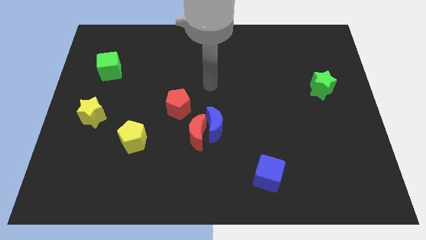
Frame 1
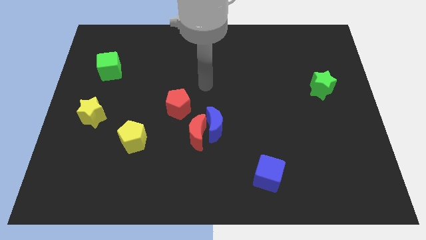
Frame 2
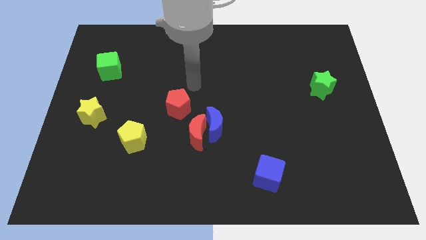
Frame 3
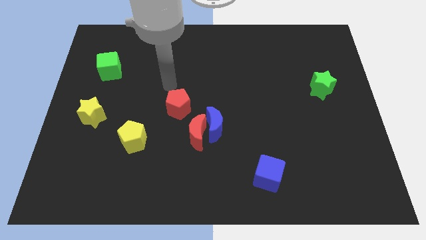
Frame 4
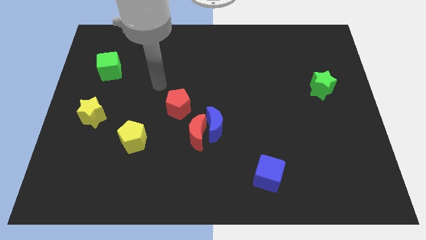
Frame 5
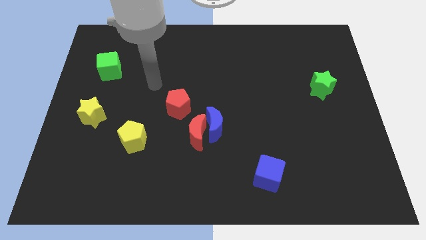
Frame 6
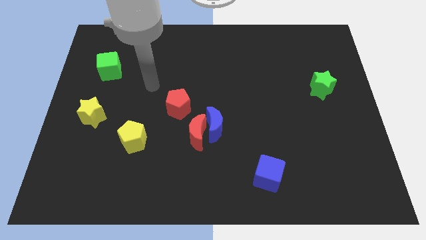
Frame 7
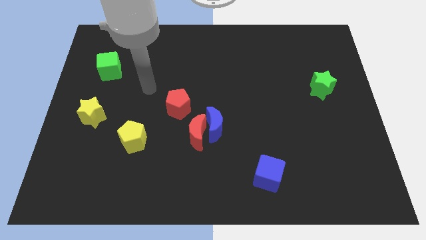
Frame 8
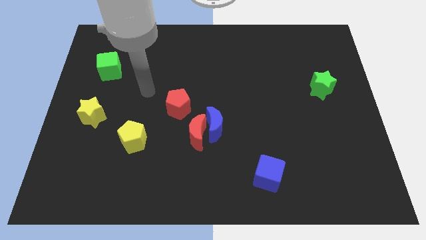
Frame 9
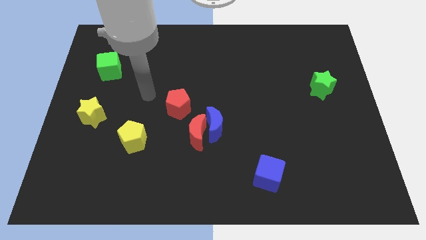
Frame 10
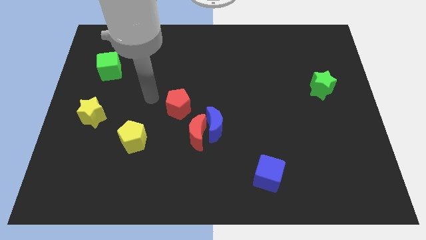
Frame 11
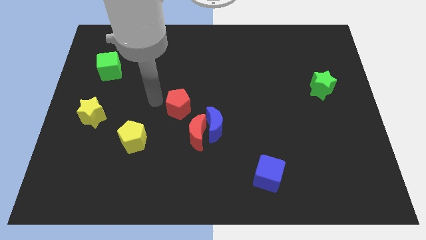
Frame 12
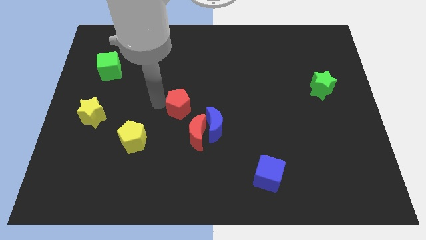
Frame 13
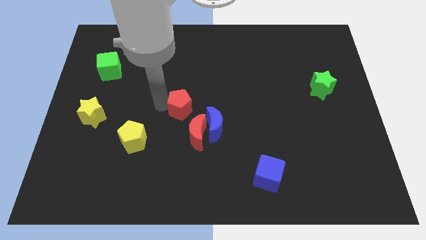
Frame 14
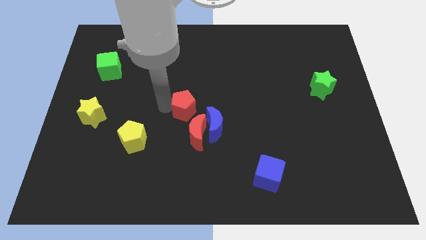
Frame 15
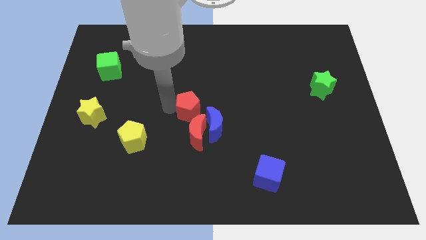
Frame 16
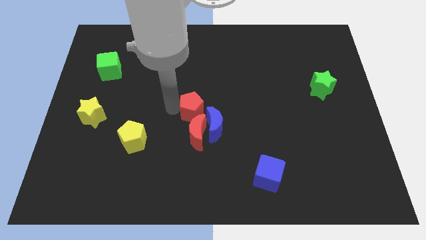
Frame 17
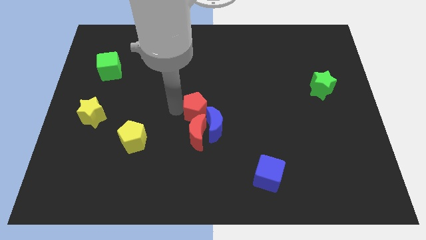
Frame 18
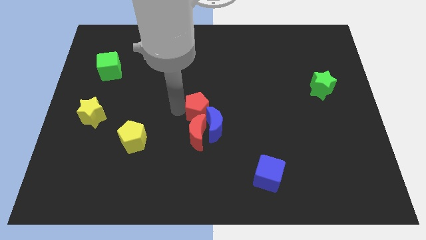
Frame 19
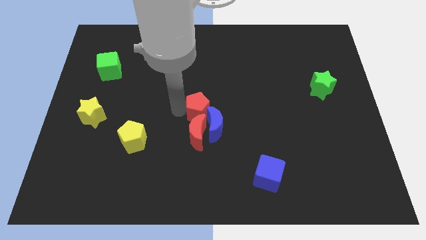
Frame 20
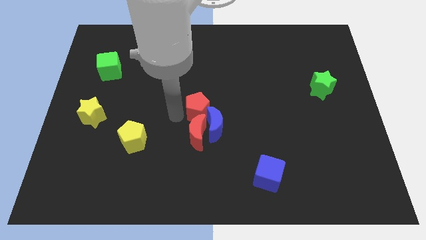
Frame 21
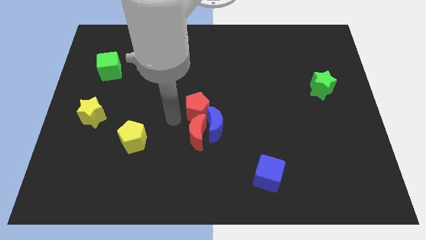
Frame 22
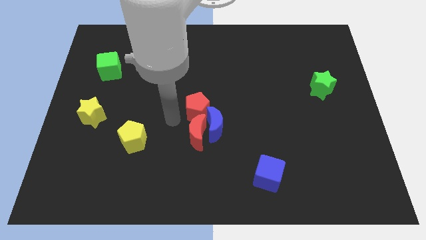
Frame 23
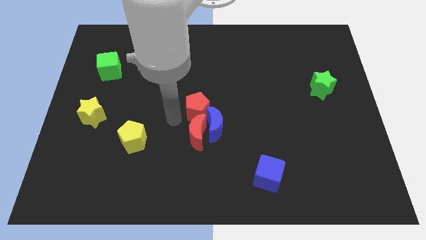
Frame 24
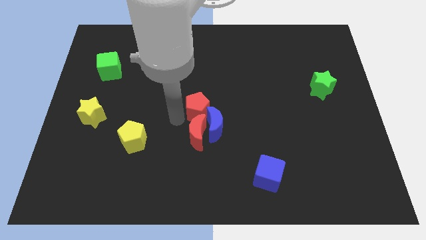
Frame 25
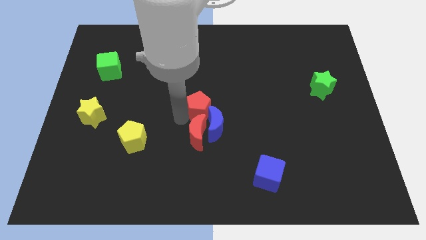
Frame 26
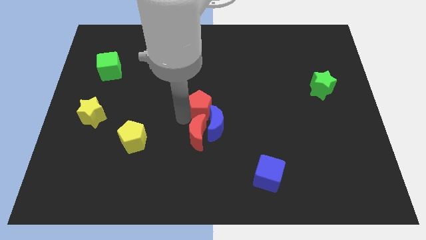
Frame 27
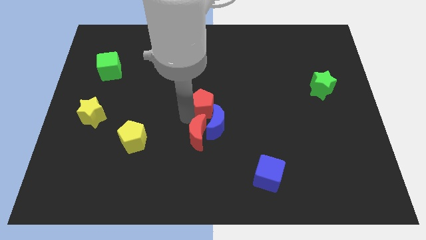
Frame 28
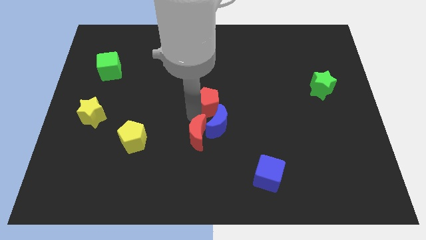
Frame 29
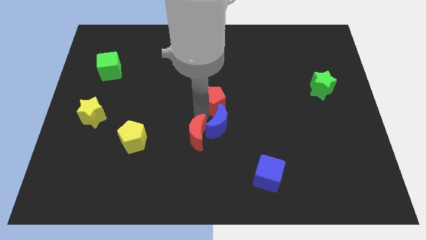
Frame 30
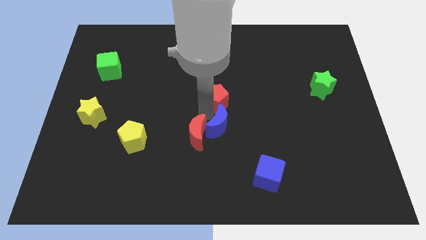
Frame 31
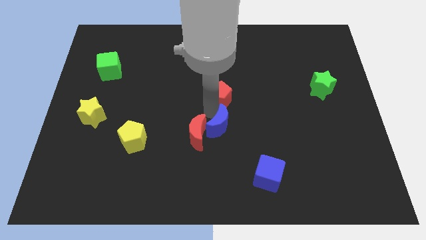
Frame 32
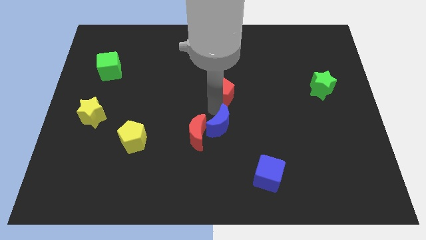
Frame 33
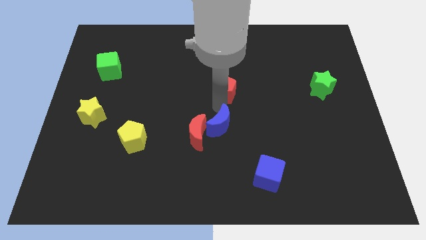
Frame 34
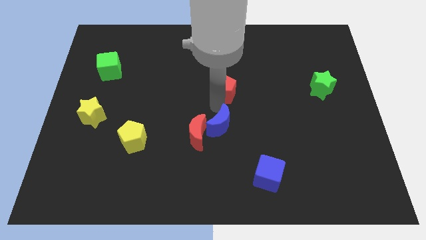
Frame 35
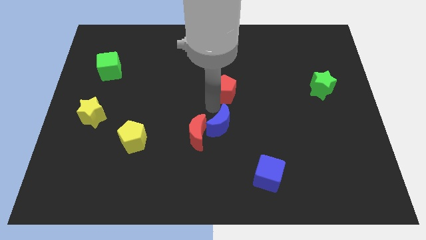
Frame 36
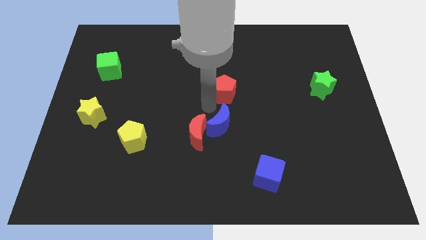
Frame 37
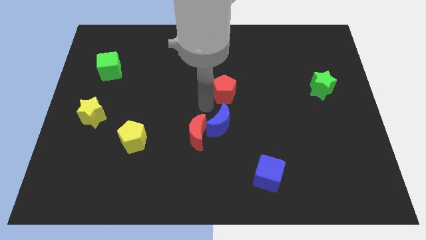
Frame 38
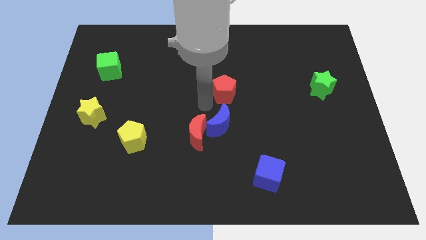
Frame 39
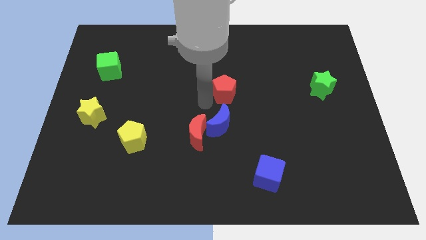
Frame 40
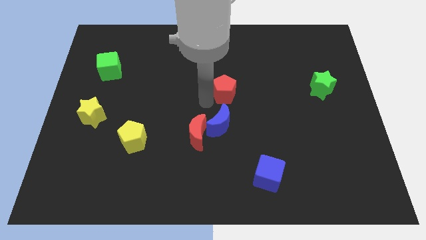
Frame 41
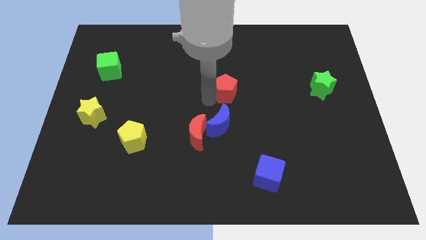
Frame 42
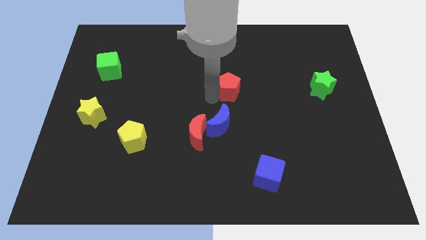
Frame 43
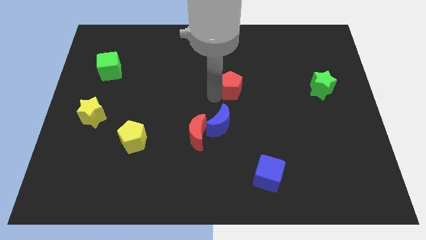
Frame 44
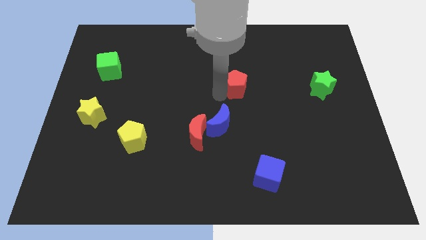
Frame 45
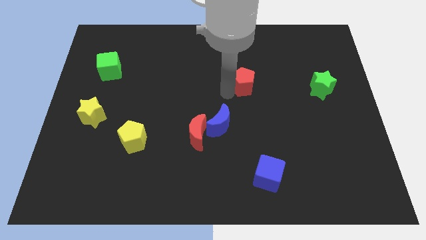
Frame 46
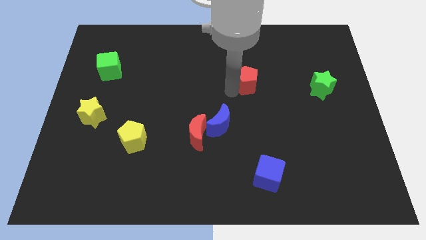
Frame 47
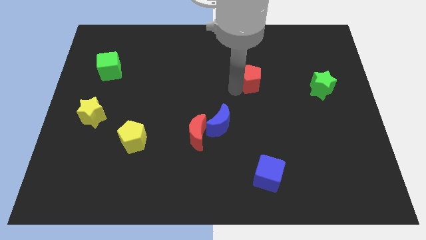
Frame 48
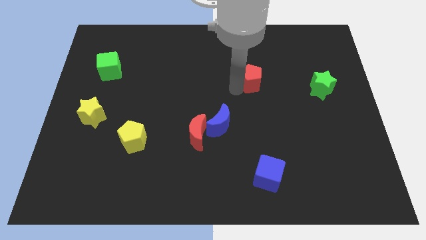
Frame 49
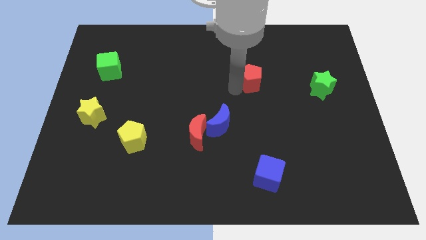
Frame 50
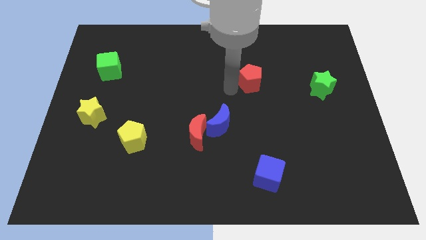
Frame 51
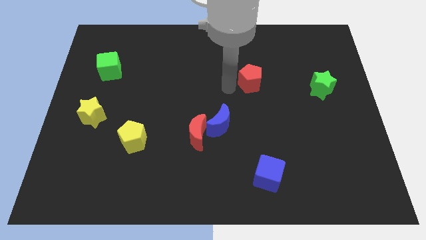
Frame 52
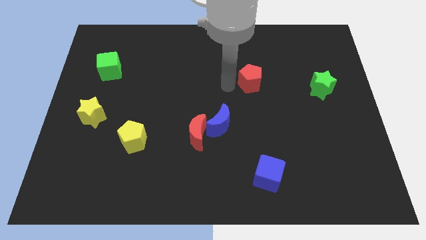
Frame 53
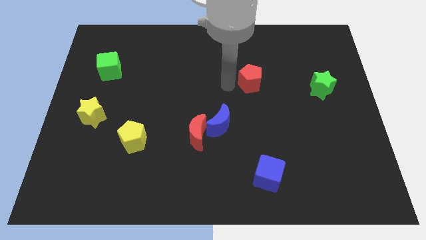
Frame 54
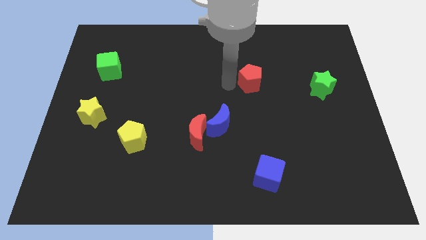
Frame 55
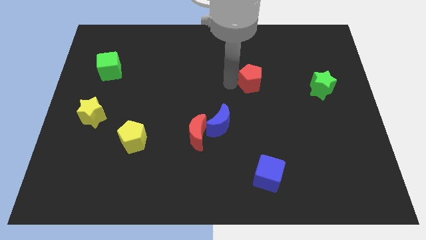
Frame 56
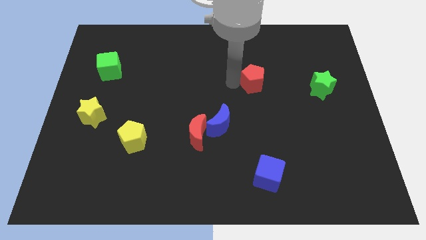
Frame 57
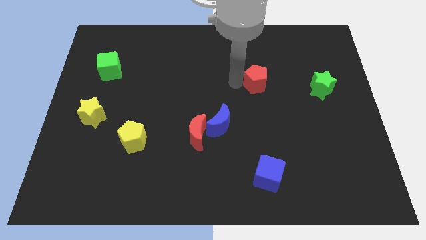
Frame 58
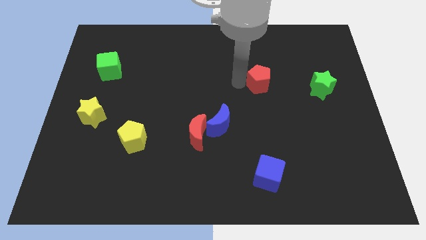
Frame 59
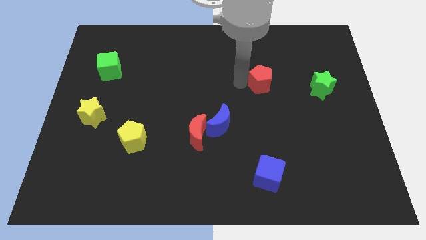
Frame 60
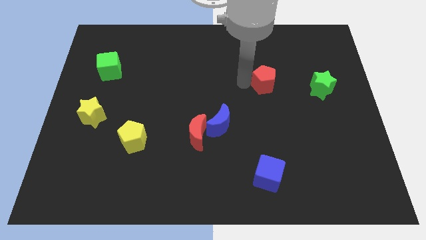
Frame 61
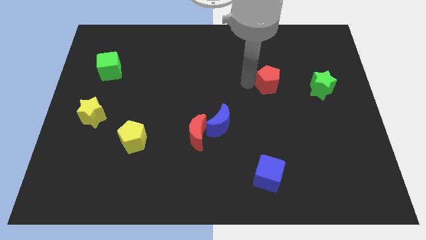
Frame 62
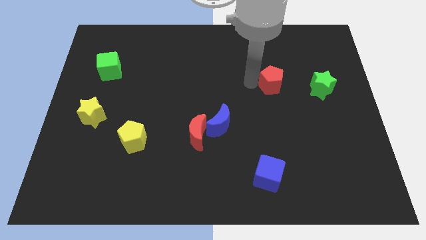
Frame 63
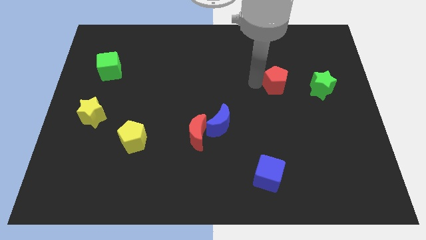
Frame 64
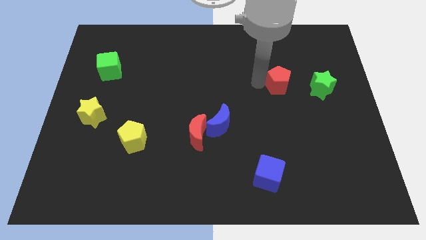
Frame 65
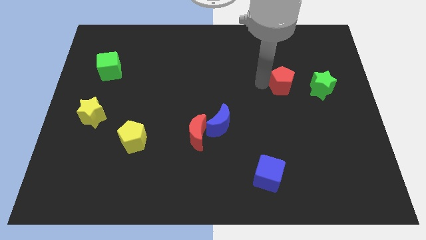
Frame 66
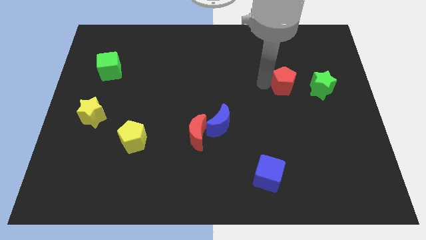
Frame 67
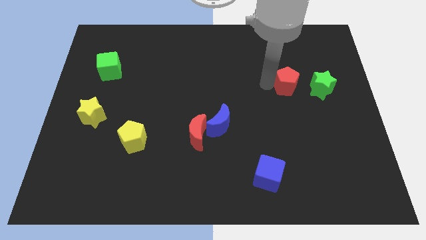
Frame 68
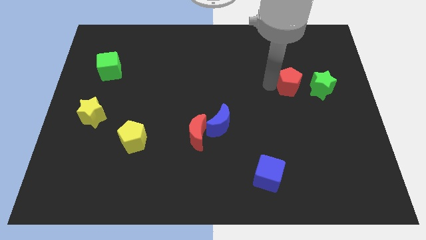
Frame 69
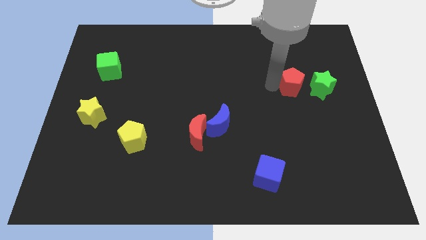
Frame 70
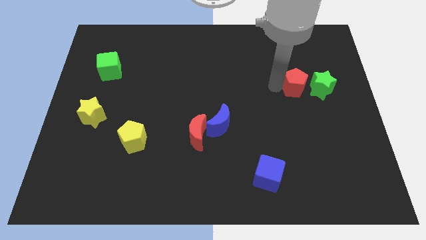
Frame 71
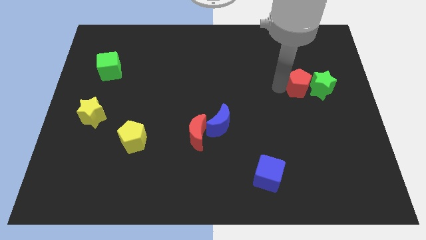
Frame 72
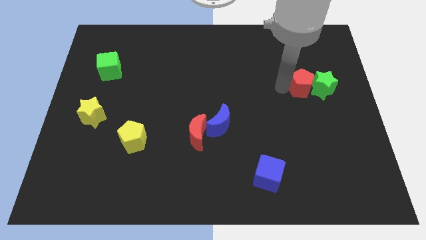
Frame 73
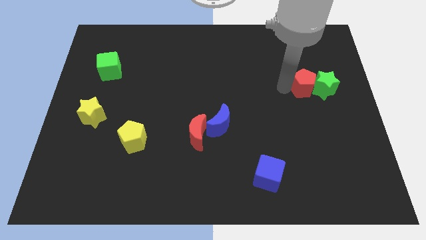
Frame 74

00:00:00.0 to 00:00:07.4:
push the red pentagon close to the green star

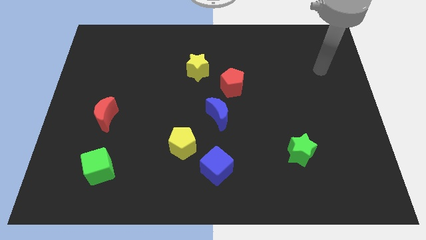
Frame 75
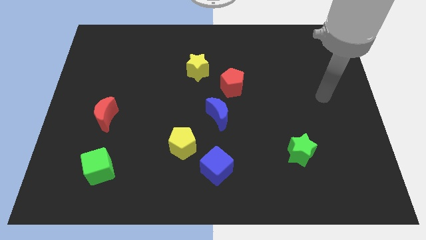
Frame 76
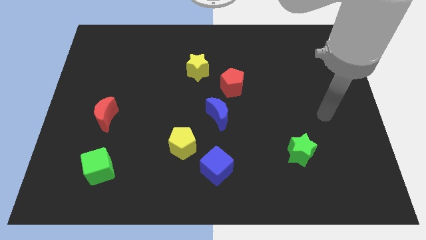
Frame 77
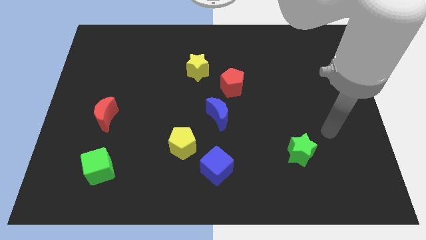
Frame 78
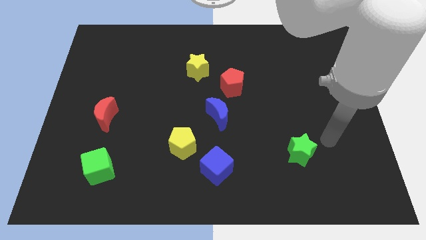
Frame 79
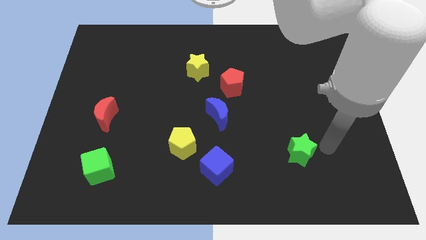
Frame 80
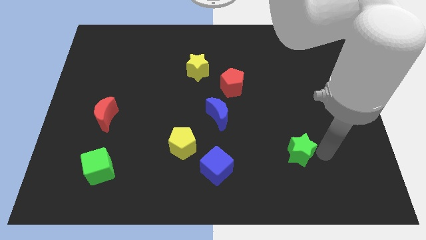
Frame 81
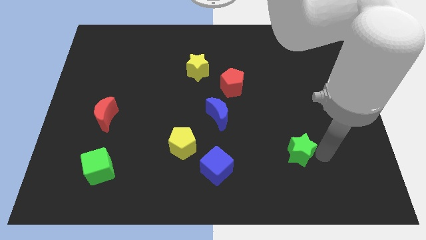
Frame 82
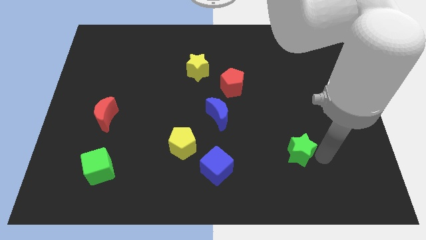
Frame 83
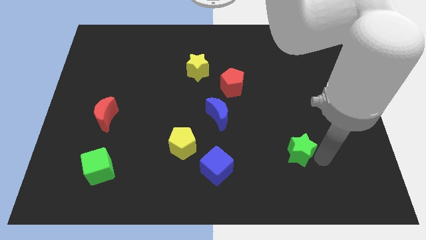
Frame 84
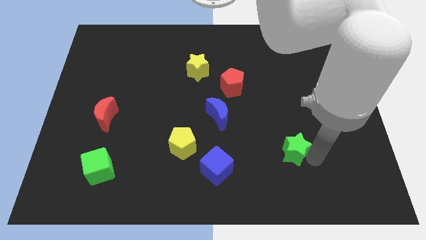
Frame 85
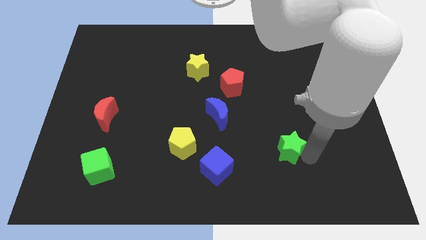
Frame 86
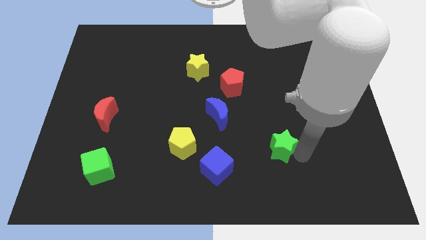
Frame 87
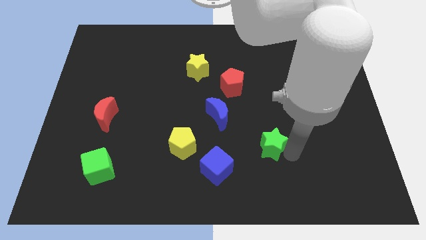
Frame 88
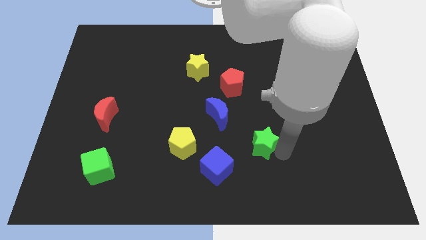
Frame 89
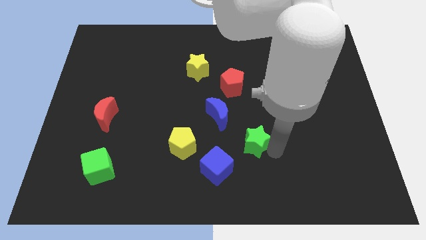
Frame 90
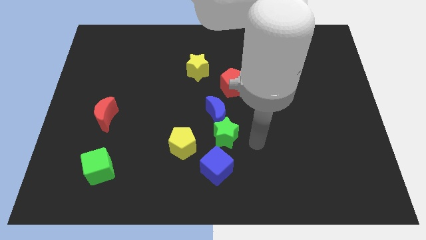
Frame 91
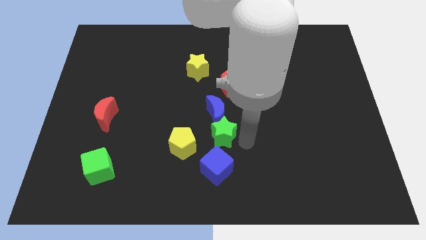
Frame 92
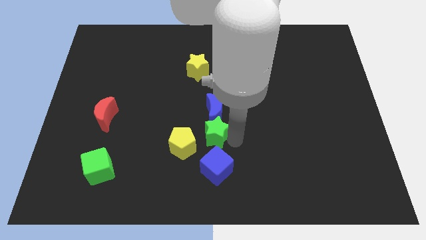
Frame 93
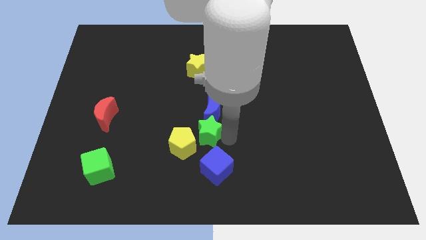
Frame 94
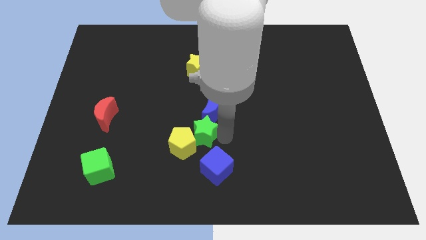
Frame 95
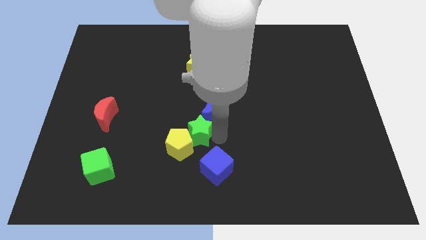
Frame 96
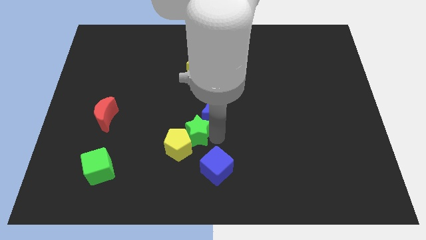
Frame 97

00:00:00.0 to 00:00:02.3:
slide the green star next to the yellow pentagon
